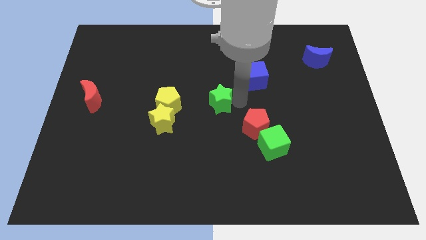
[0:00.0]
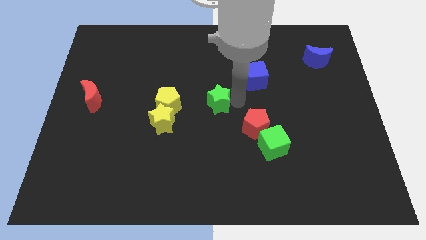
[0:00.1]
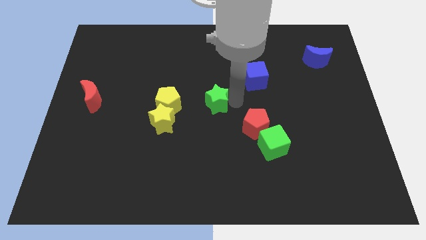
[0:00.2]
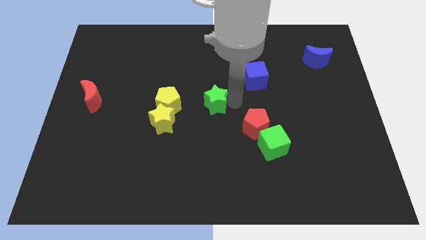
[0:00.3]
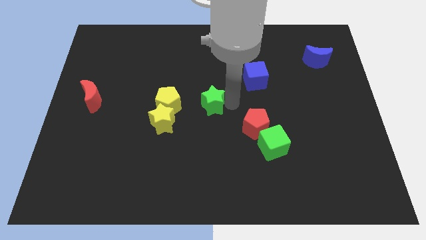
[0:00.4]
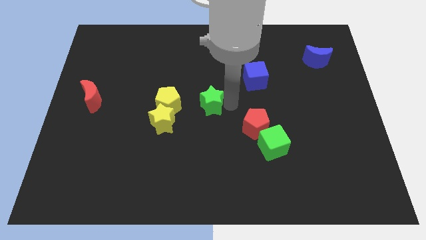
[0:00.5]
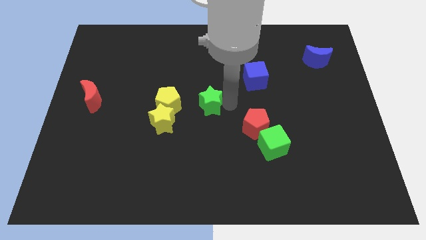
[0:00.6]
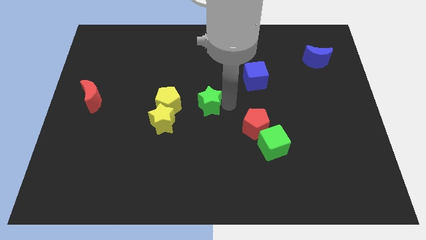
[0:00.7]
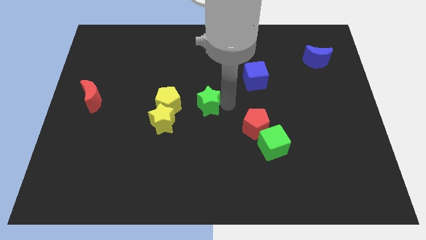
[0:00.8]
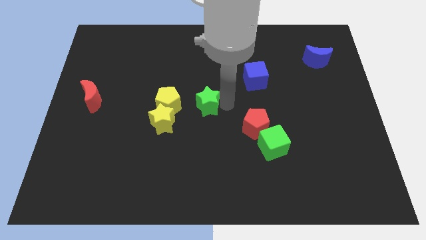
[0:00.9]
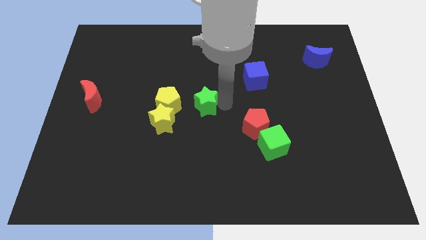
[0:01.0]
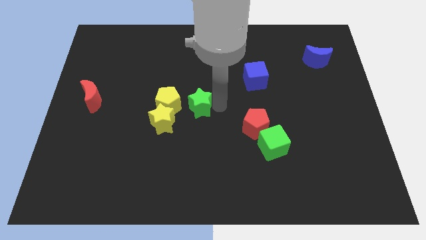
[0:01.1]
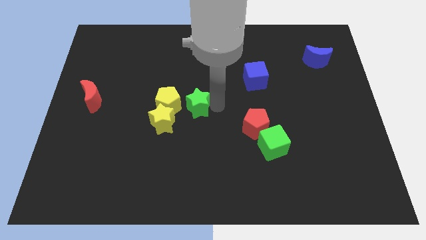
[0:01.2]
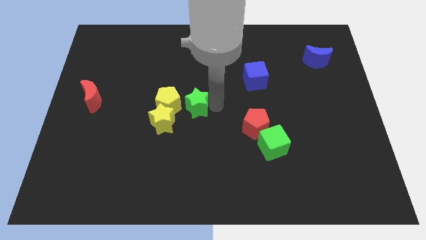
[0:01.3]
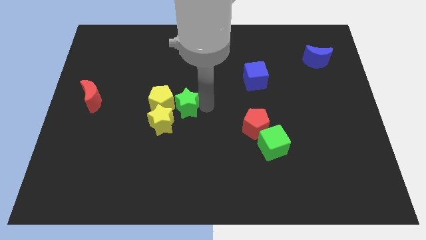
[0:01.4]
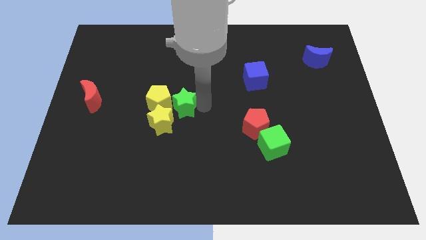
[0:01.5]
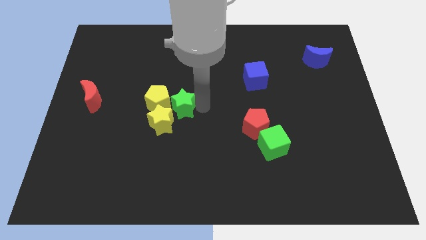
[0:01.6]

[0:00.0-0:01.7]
push the green star to the group of object

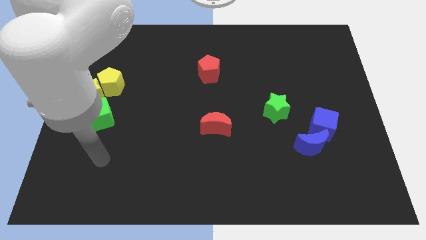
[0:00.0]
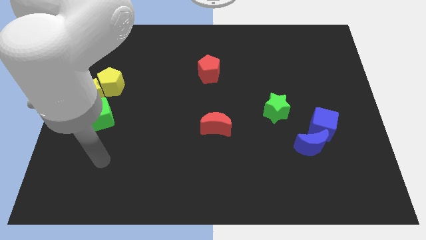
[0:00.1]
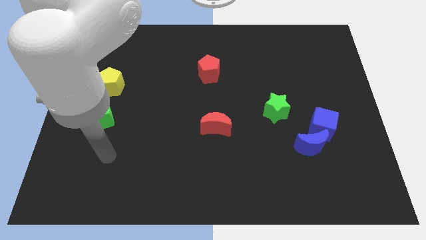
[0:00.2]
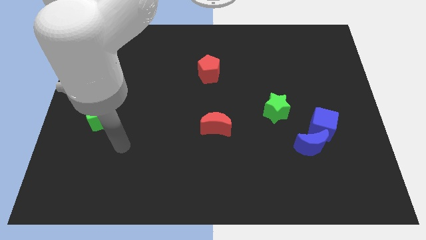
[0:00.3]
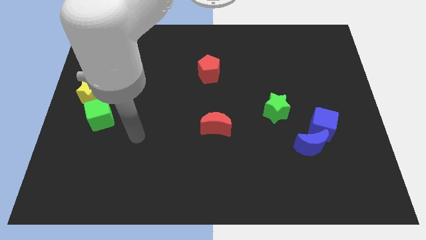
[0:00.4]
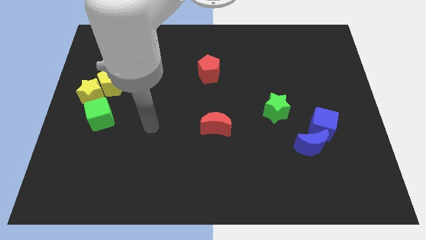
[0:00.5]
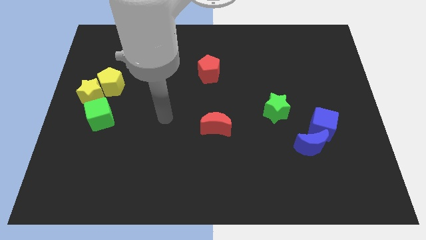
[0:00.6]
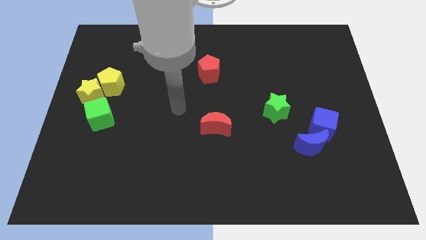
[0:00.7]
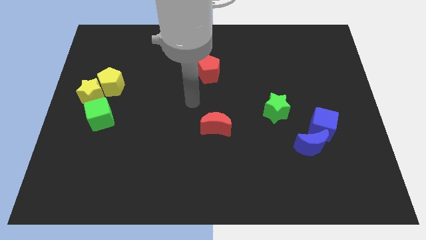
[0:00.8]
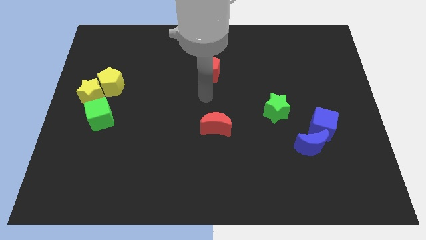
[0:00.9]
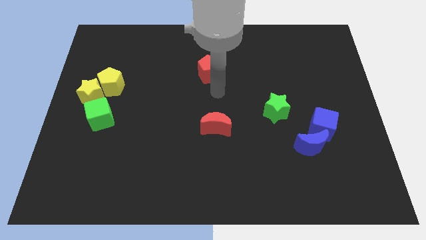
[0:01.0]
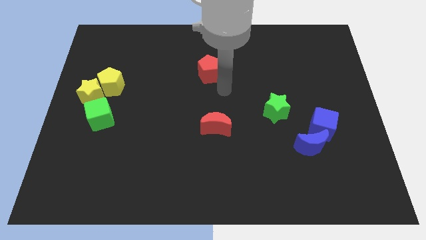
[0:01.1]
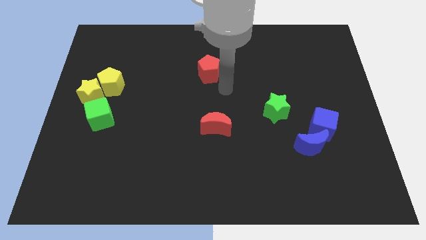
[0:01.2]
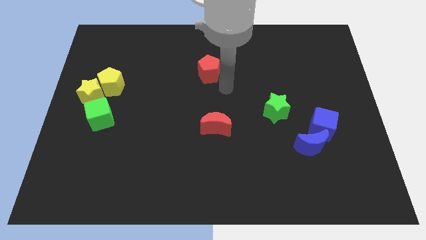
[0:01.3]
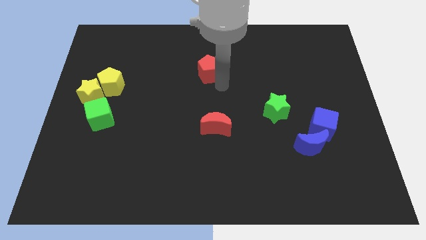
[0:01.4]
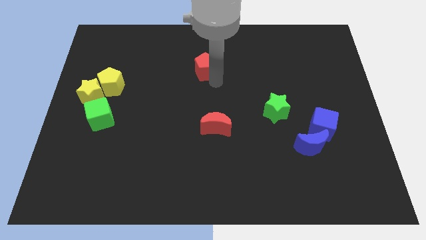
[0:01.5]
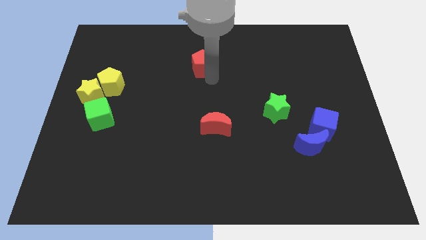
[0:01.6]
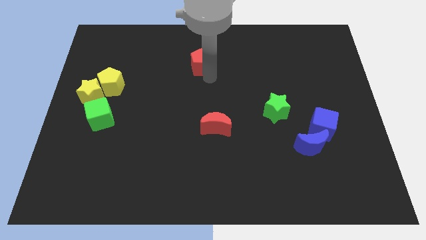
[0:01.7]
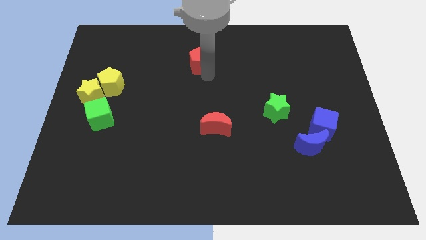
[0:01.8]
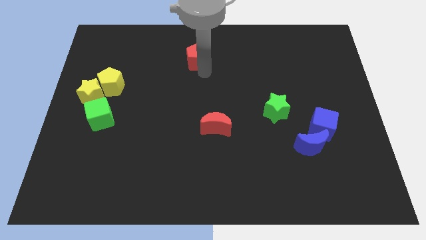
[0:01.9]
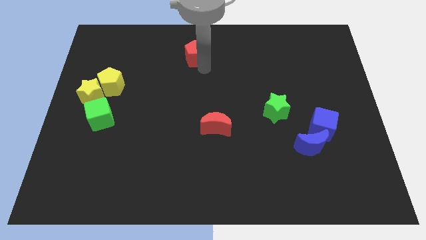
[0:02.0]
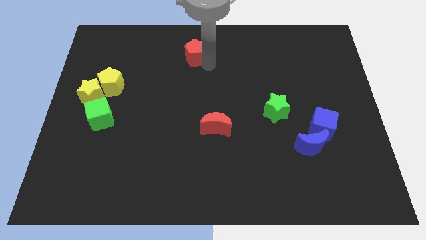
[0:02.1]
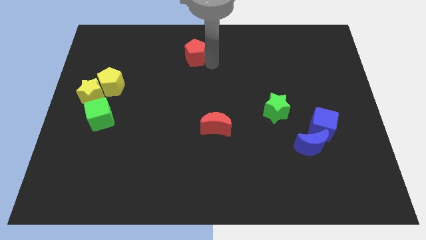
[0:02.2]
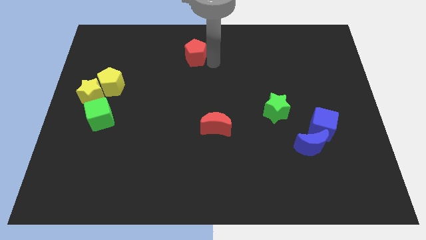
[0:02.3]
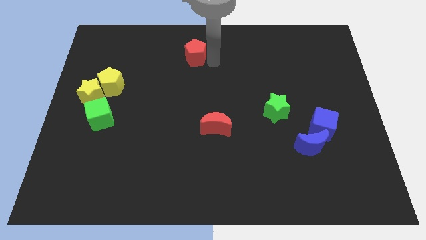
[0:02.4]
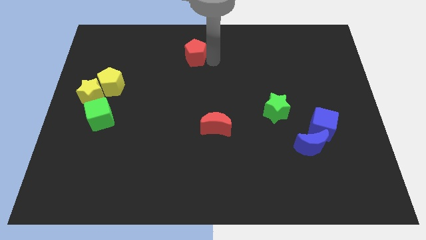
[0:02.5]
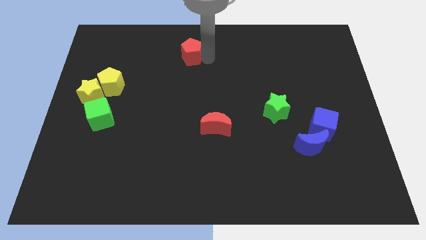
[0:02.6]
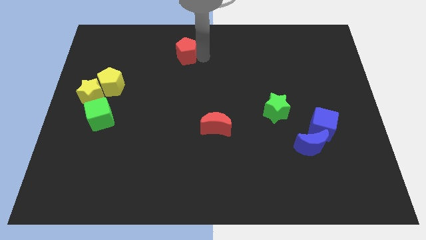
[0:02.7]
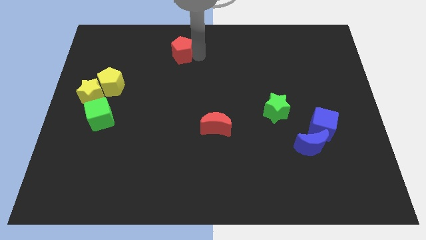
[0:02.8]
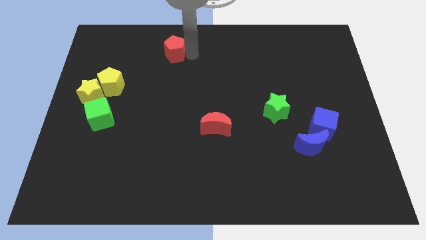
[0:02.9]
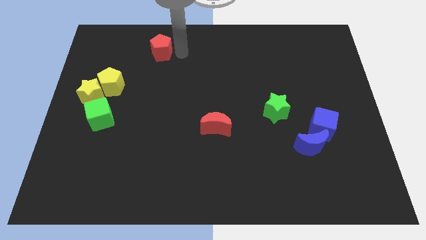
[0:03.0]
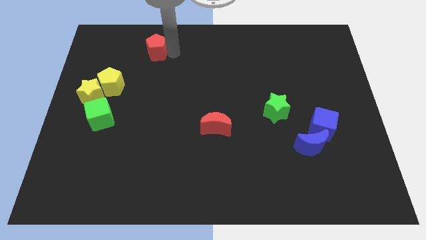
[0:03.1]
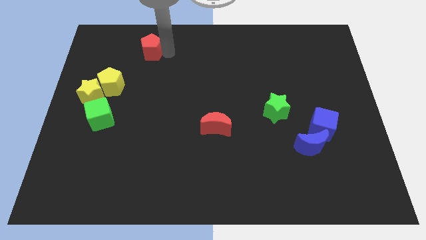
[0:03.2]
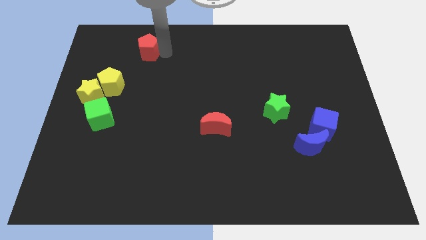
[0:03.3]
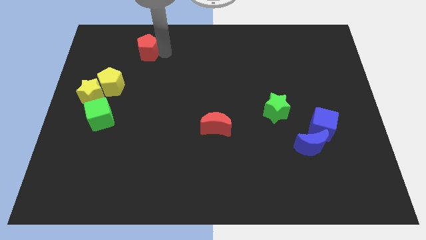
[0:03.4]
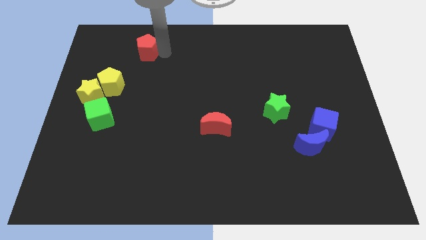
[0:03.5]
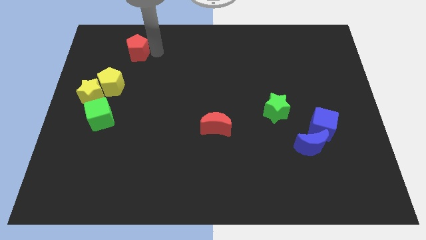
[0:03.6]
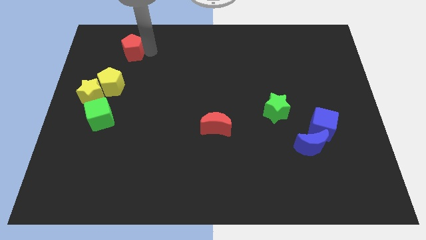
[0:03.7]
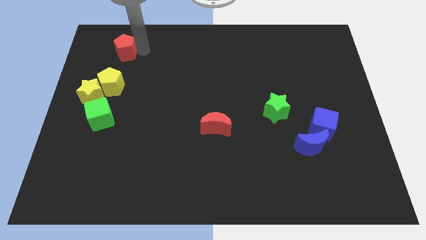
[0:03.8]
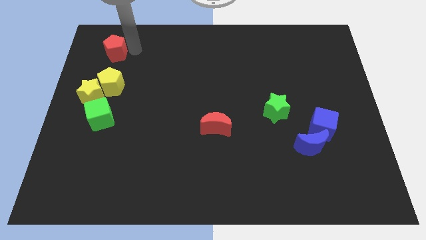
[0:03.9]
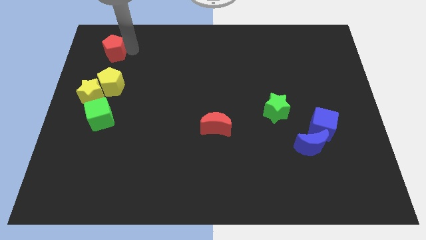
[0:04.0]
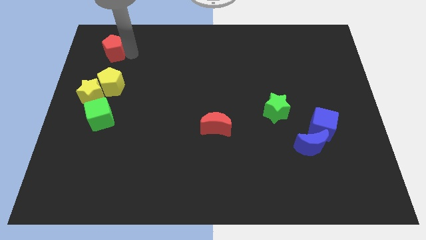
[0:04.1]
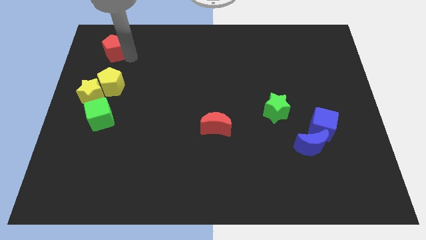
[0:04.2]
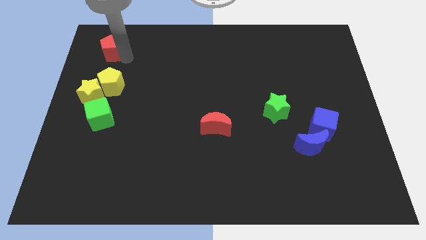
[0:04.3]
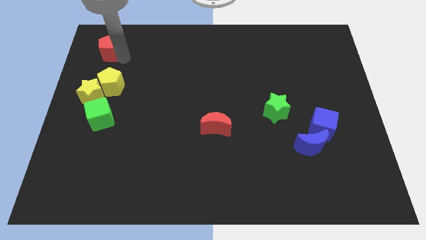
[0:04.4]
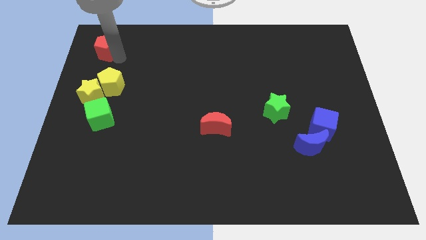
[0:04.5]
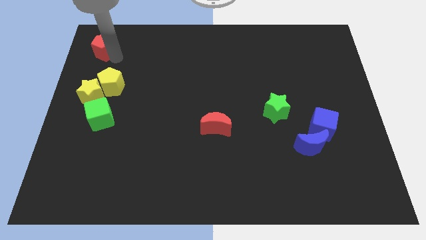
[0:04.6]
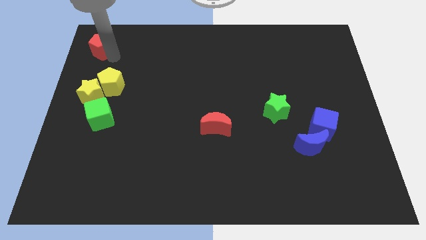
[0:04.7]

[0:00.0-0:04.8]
push the red pentagon above the yellow star

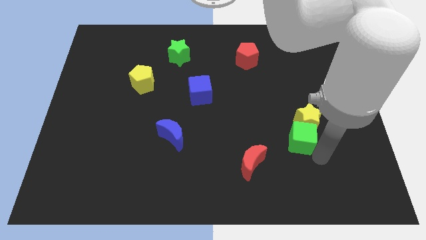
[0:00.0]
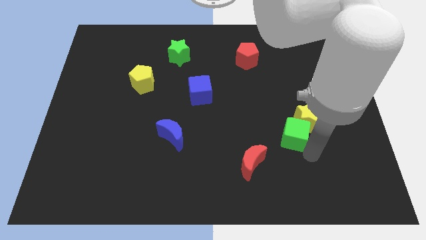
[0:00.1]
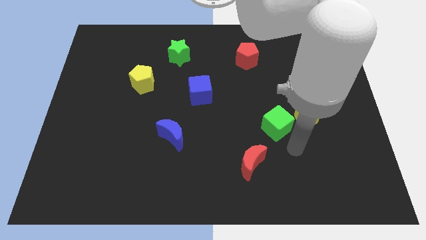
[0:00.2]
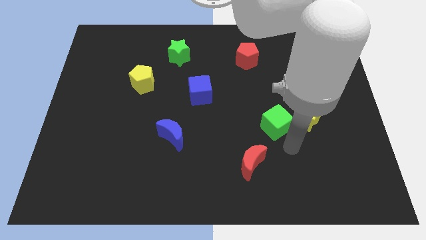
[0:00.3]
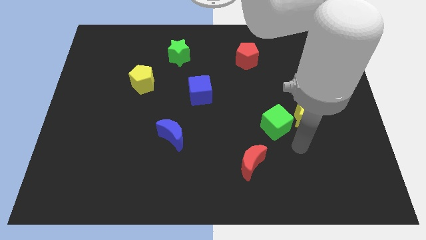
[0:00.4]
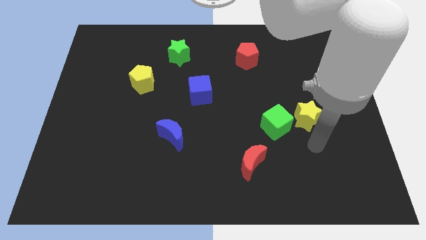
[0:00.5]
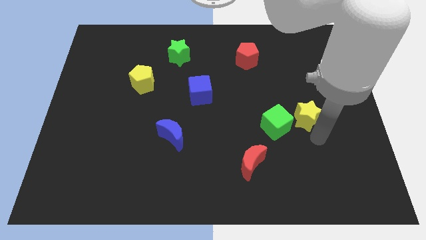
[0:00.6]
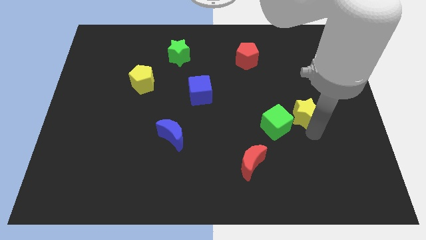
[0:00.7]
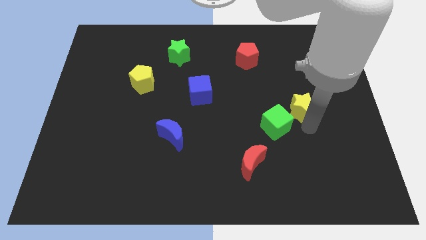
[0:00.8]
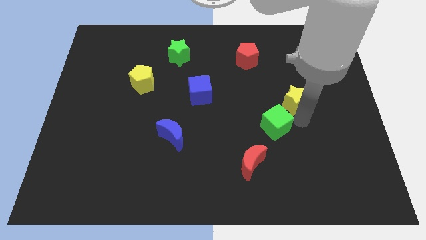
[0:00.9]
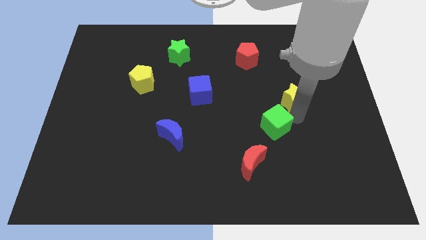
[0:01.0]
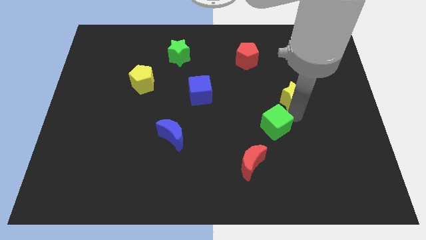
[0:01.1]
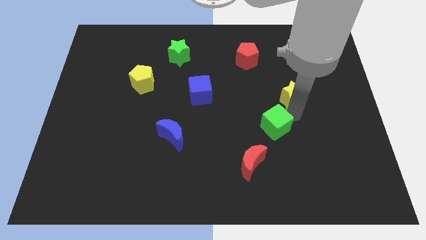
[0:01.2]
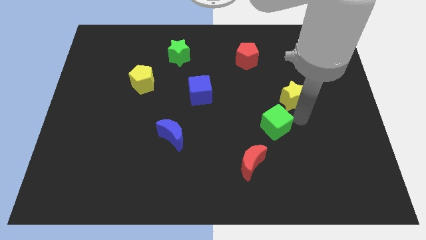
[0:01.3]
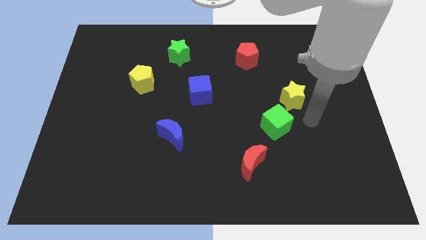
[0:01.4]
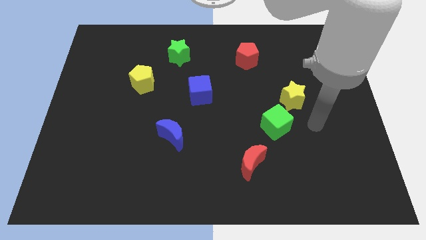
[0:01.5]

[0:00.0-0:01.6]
separate yellow star and the green cube

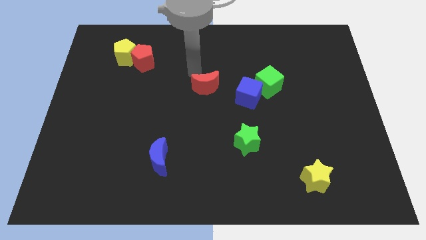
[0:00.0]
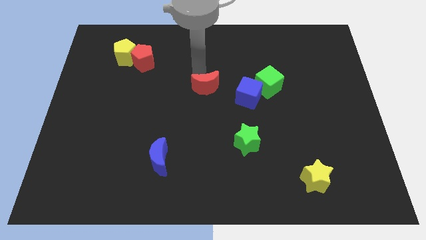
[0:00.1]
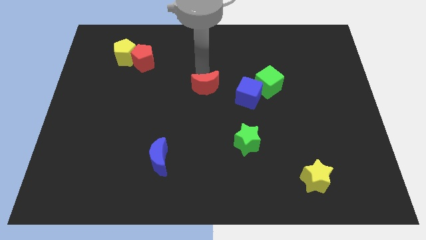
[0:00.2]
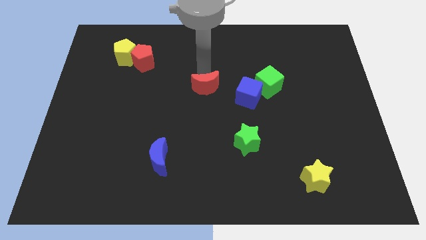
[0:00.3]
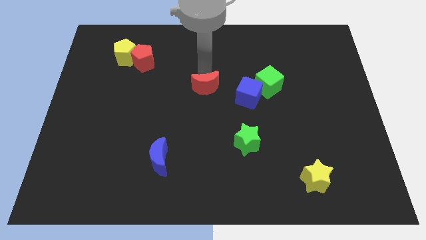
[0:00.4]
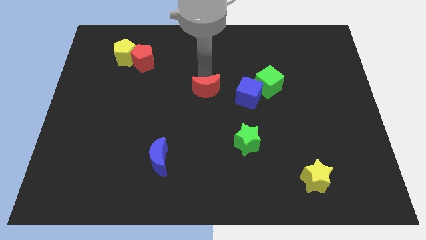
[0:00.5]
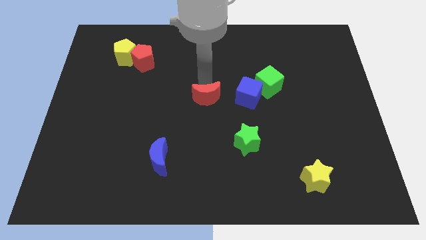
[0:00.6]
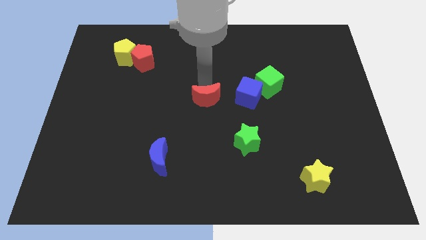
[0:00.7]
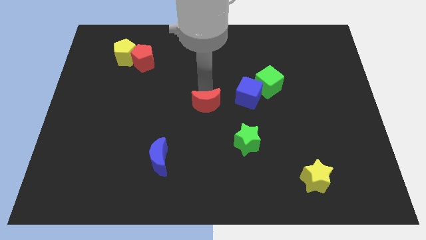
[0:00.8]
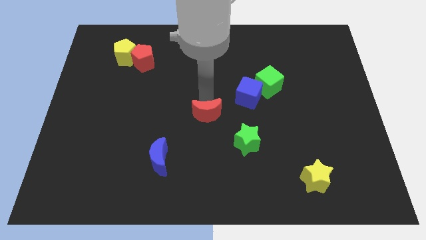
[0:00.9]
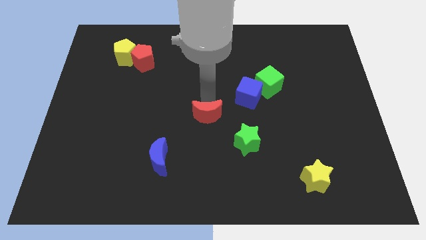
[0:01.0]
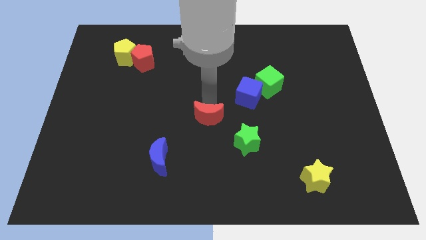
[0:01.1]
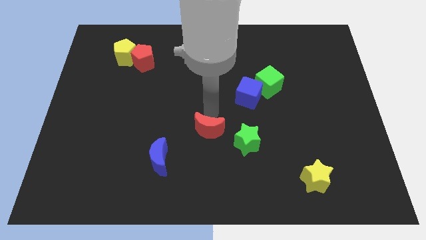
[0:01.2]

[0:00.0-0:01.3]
move the red crescent to the bottom of the board
